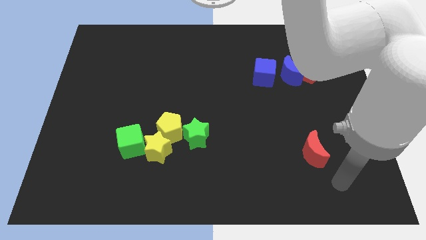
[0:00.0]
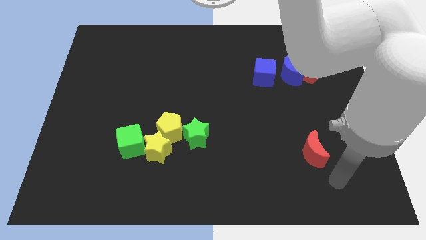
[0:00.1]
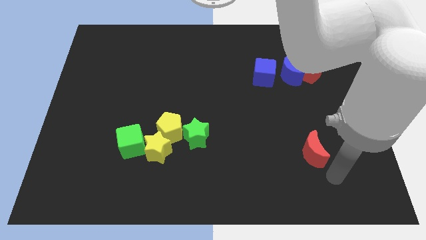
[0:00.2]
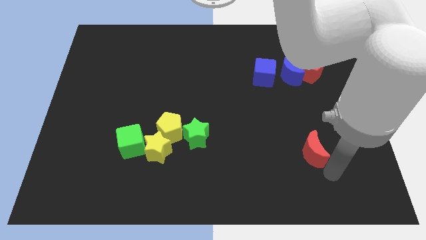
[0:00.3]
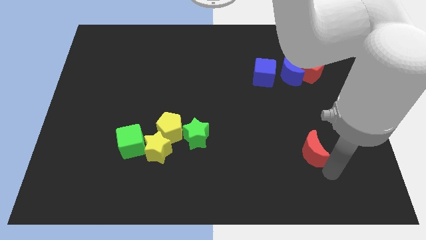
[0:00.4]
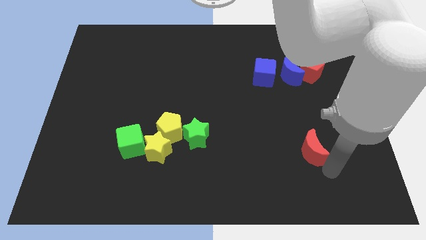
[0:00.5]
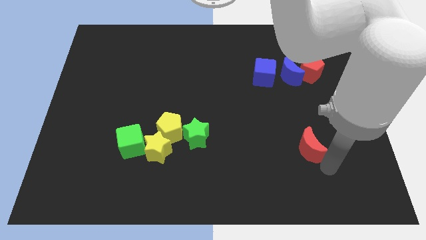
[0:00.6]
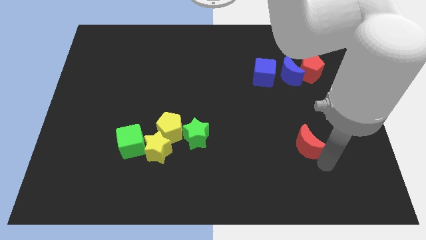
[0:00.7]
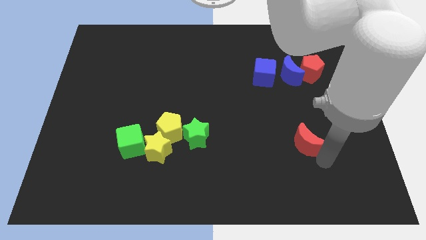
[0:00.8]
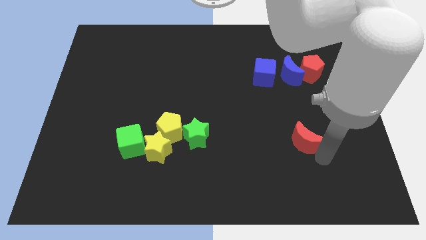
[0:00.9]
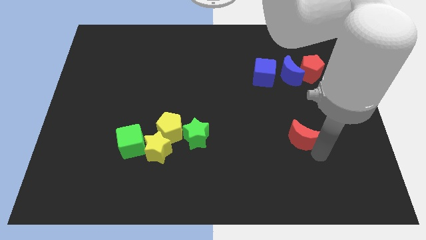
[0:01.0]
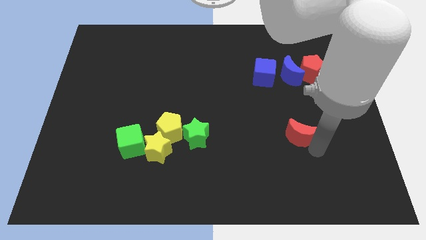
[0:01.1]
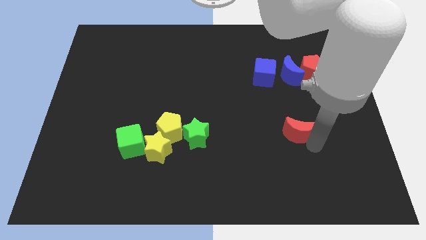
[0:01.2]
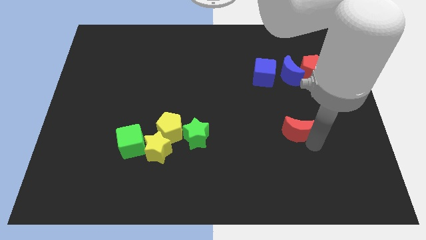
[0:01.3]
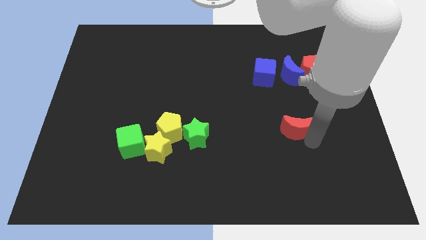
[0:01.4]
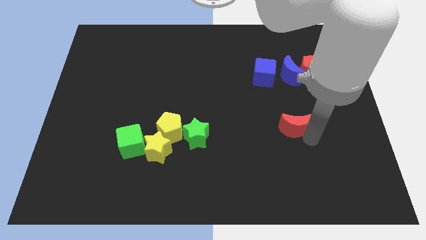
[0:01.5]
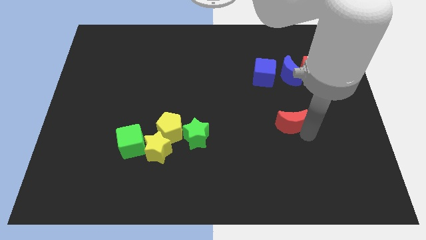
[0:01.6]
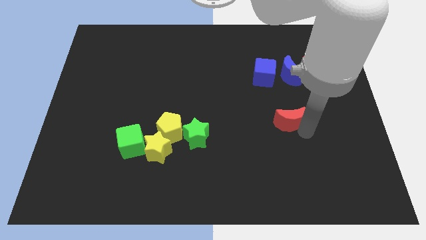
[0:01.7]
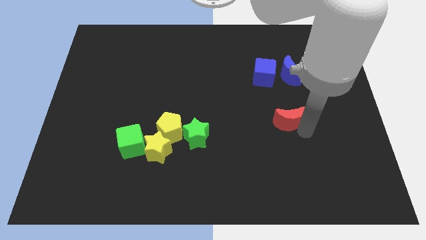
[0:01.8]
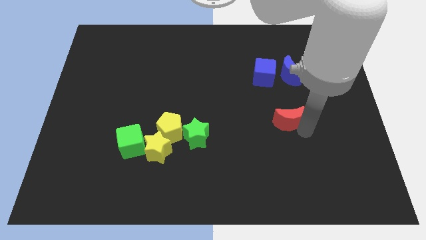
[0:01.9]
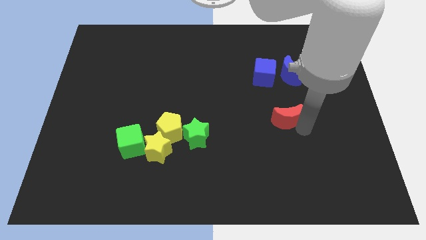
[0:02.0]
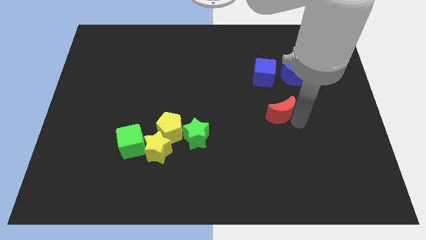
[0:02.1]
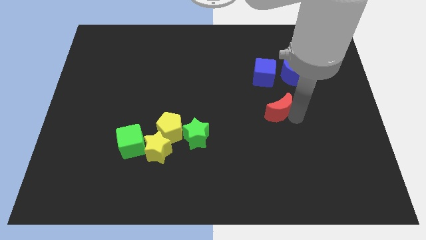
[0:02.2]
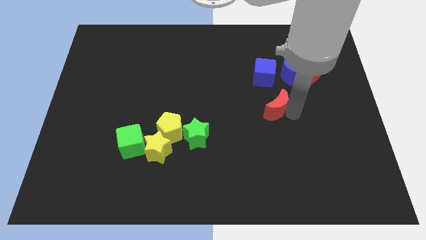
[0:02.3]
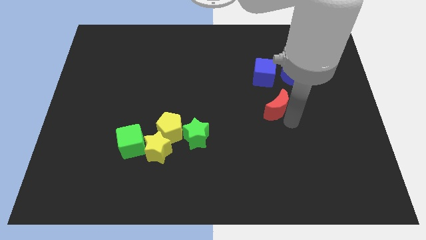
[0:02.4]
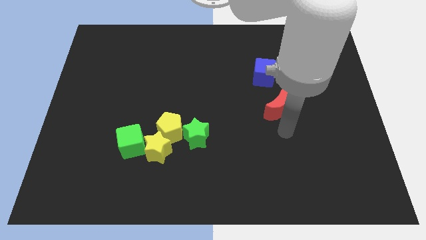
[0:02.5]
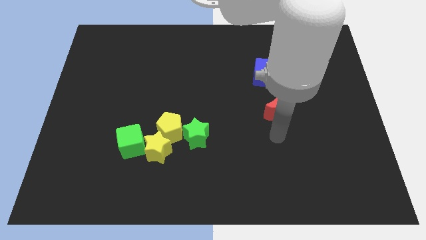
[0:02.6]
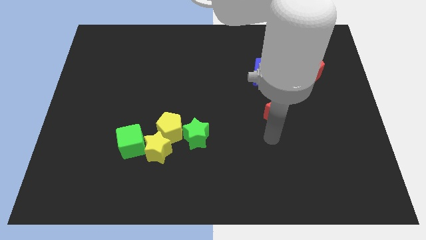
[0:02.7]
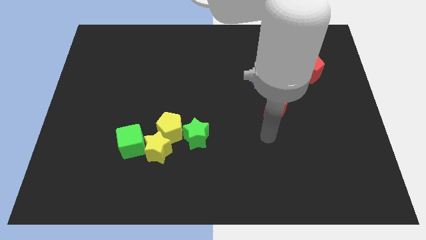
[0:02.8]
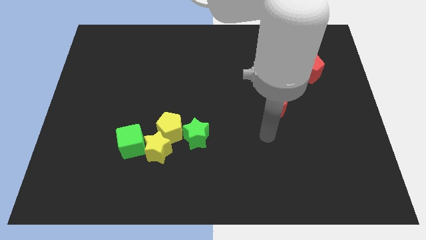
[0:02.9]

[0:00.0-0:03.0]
move the red moon towards up

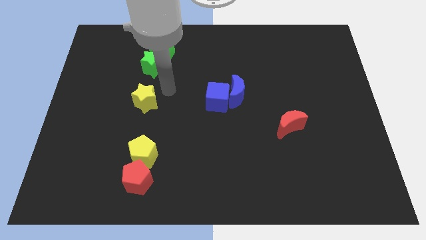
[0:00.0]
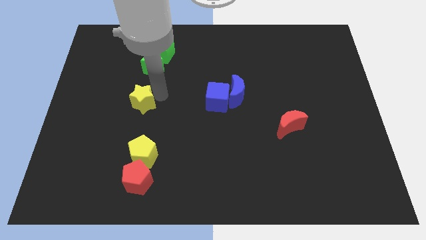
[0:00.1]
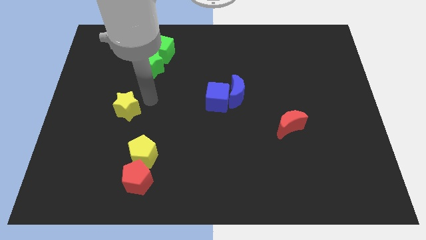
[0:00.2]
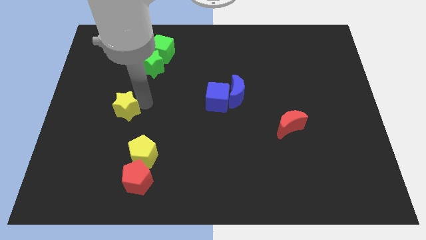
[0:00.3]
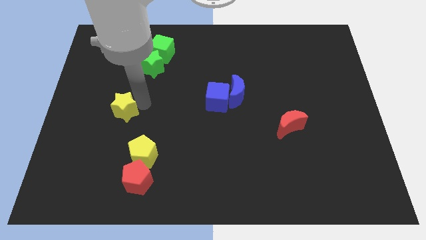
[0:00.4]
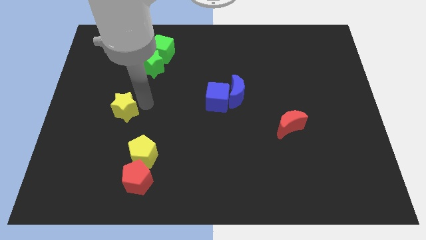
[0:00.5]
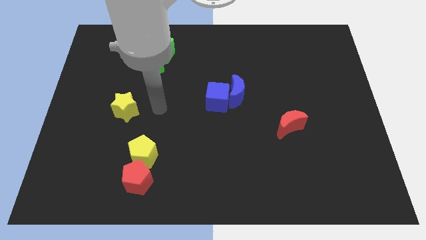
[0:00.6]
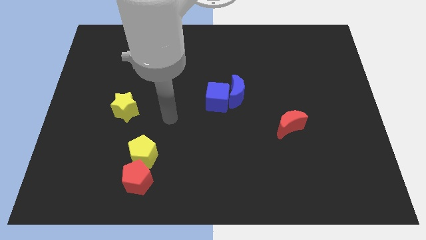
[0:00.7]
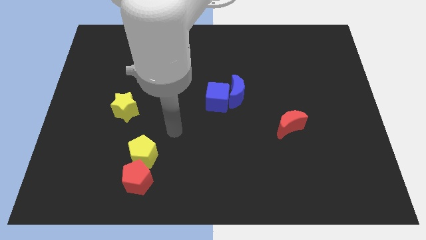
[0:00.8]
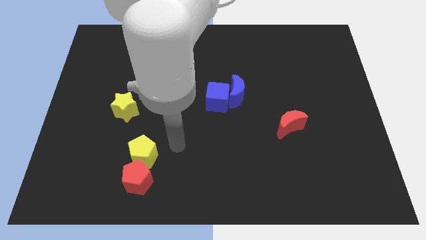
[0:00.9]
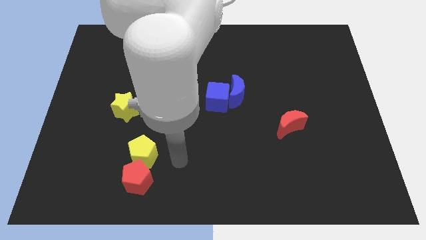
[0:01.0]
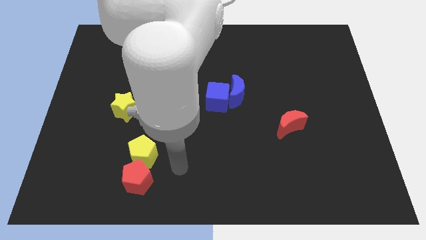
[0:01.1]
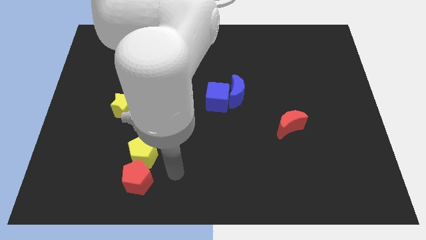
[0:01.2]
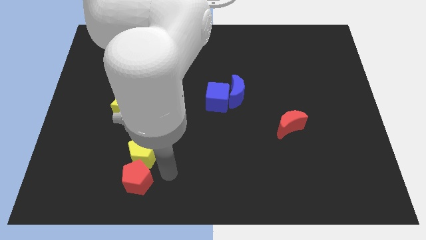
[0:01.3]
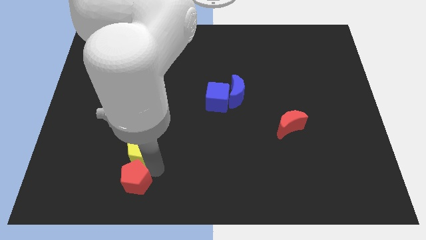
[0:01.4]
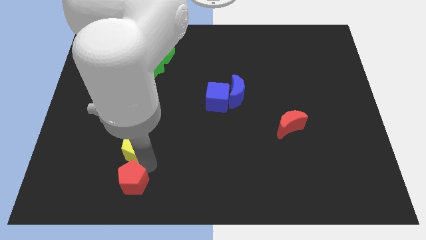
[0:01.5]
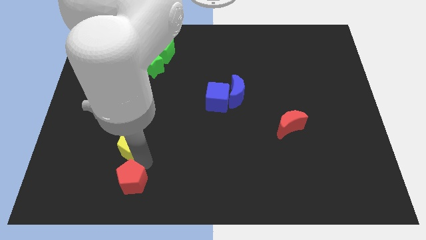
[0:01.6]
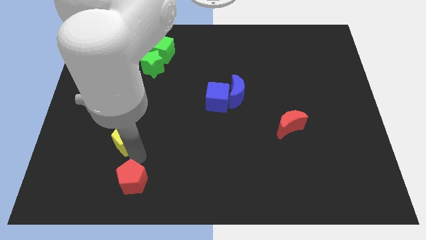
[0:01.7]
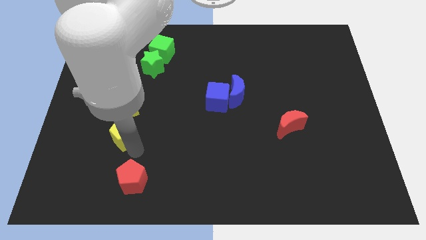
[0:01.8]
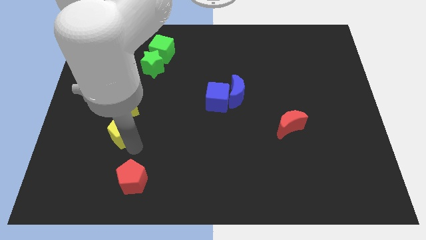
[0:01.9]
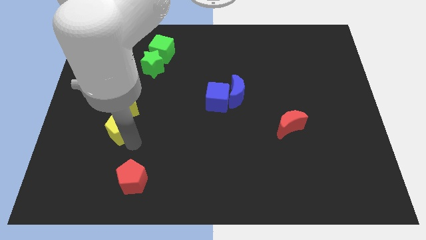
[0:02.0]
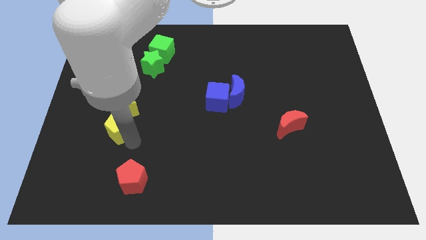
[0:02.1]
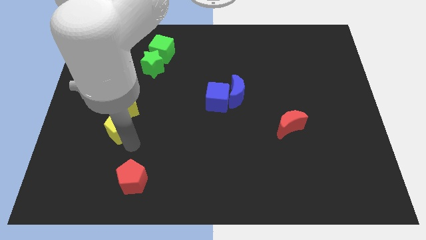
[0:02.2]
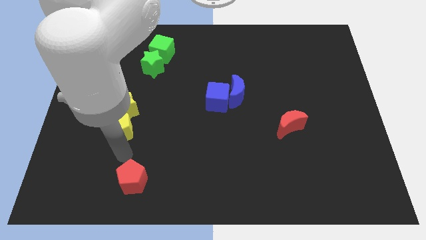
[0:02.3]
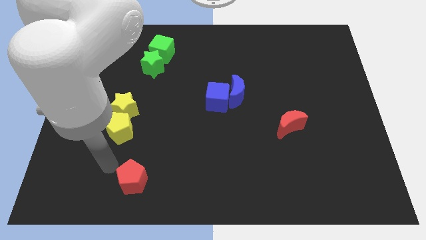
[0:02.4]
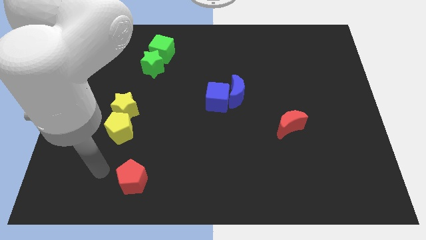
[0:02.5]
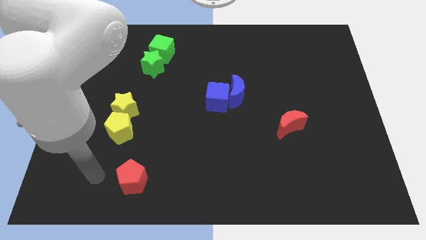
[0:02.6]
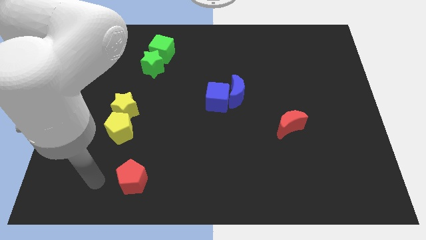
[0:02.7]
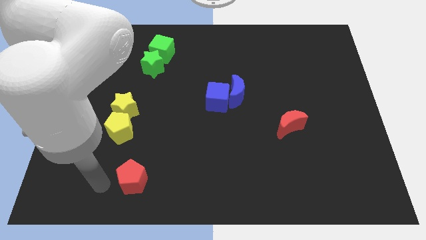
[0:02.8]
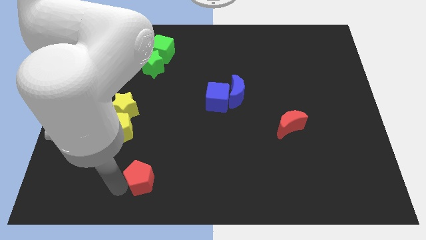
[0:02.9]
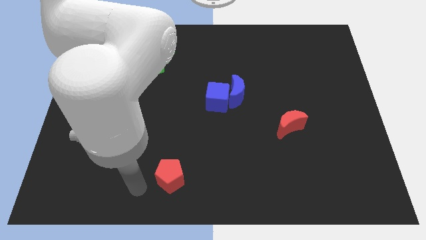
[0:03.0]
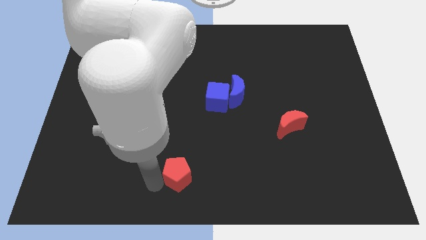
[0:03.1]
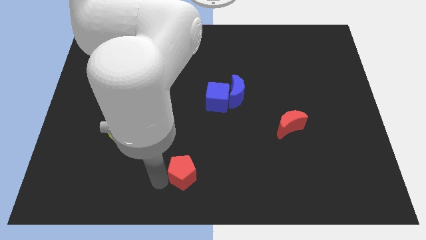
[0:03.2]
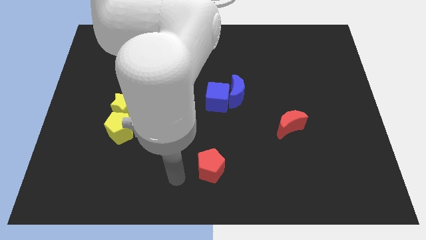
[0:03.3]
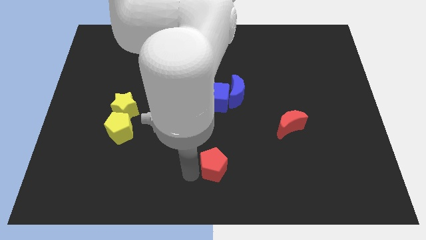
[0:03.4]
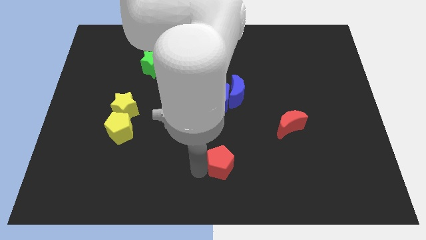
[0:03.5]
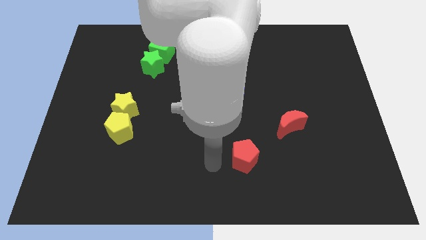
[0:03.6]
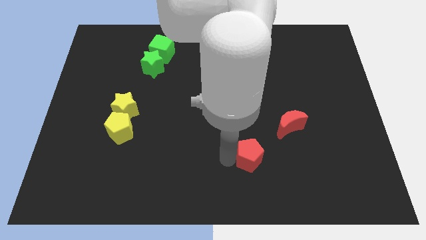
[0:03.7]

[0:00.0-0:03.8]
slightly push the yellow star towards the left side of the board

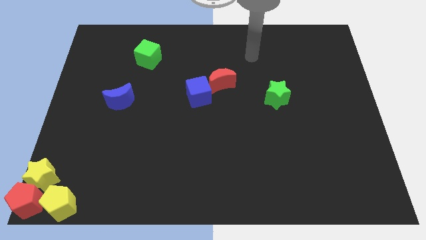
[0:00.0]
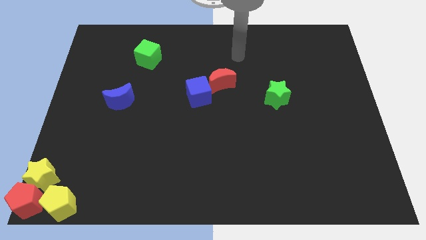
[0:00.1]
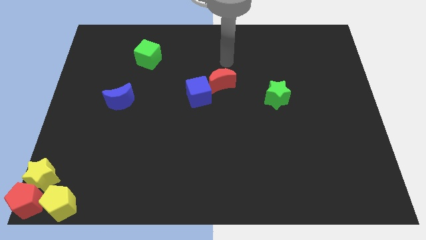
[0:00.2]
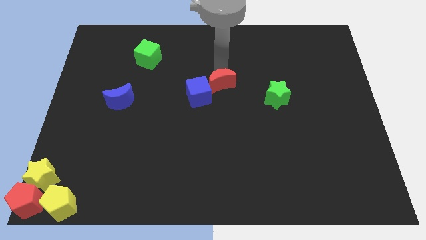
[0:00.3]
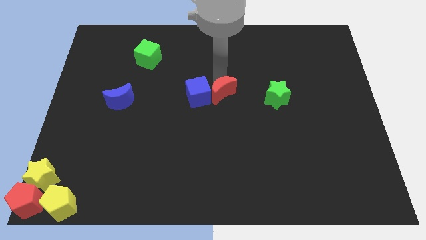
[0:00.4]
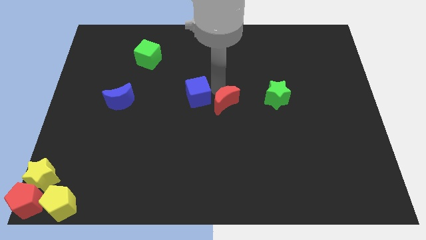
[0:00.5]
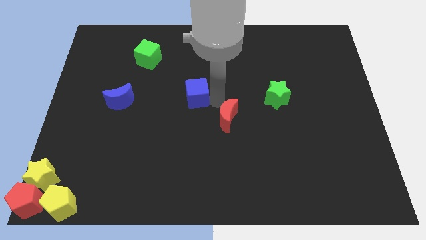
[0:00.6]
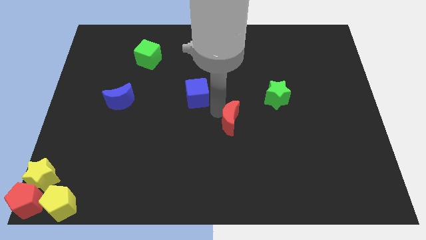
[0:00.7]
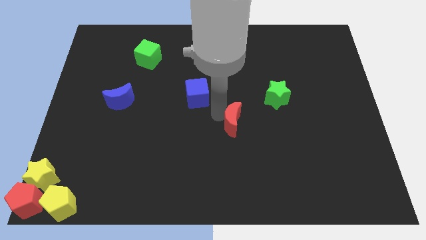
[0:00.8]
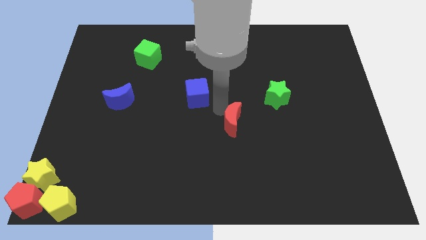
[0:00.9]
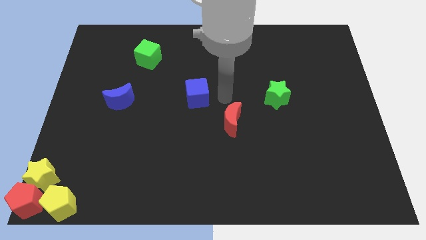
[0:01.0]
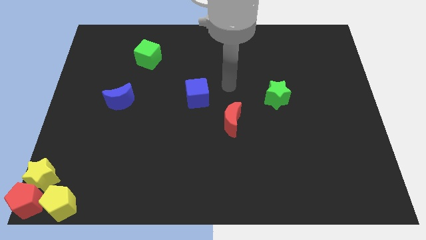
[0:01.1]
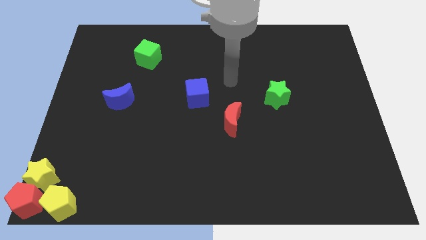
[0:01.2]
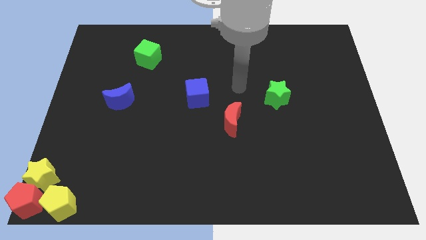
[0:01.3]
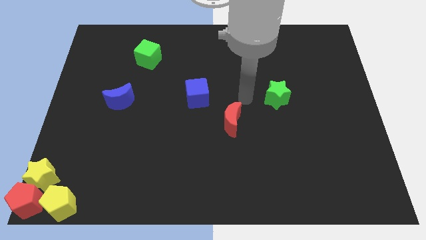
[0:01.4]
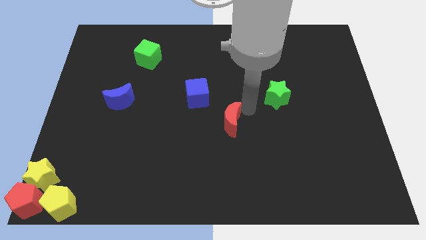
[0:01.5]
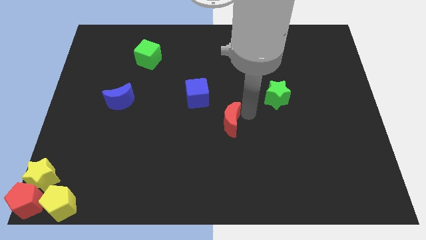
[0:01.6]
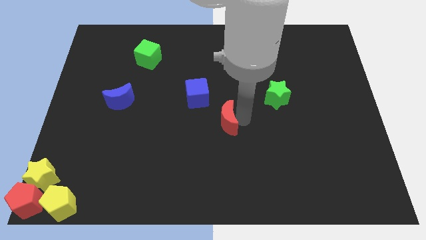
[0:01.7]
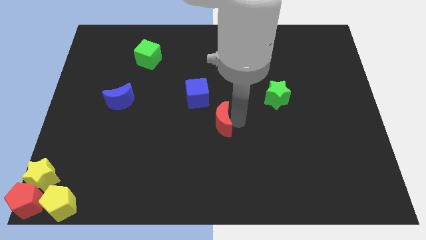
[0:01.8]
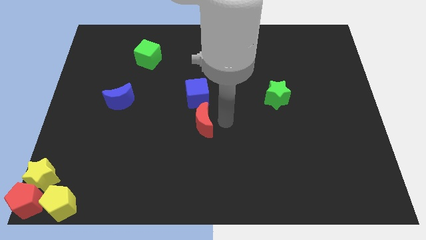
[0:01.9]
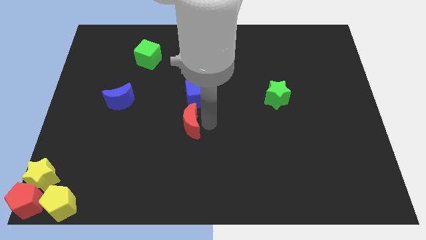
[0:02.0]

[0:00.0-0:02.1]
slide red moon below blue cube

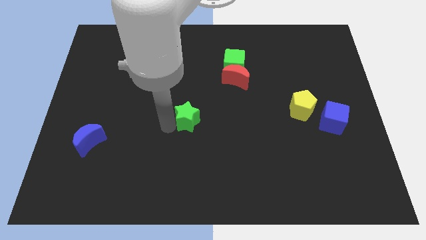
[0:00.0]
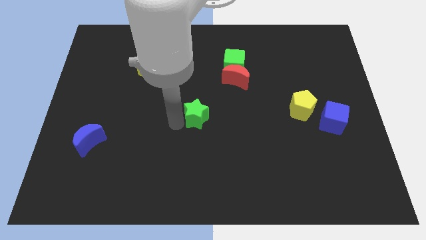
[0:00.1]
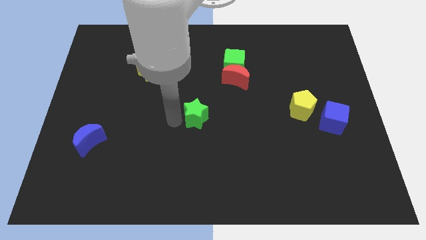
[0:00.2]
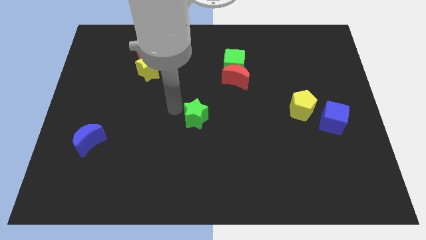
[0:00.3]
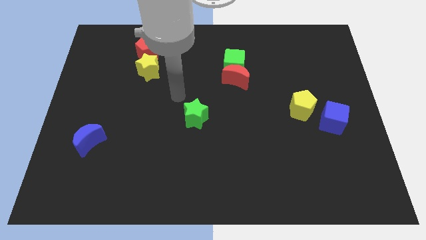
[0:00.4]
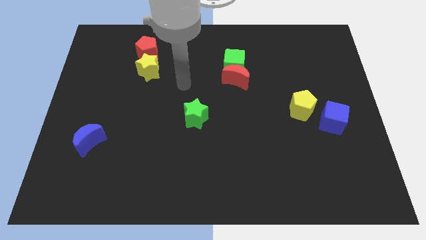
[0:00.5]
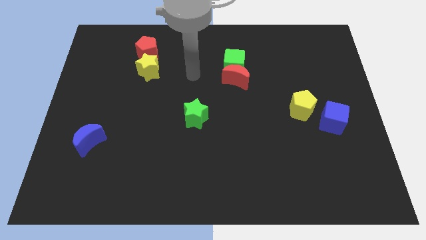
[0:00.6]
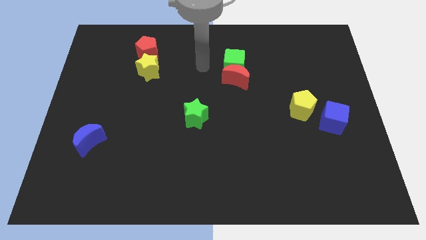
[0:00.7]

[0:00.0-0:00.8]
push the green star to the center of the board
